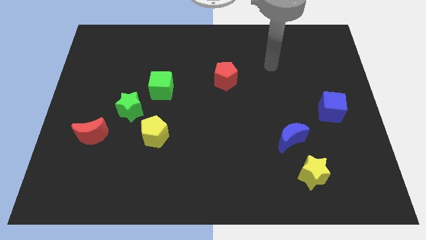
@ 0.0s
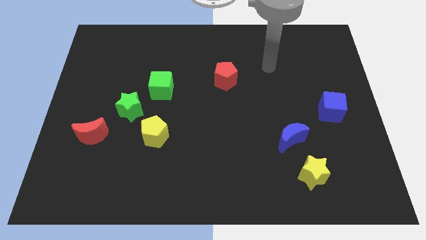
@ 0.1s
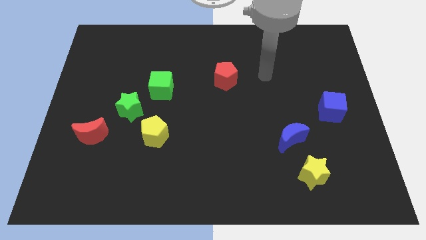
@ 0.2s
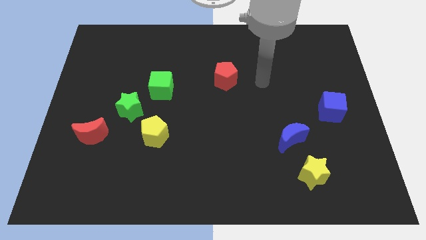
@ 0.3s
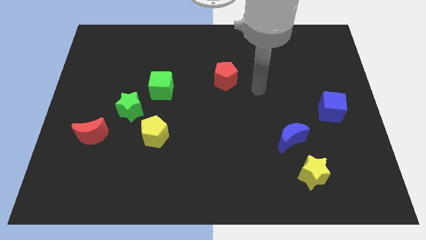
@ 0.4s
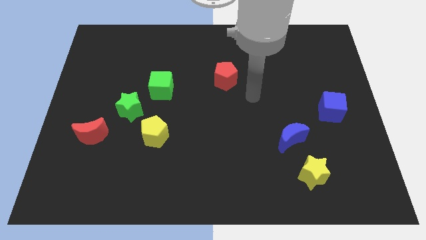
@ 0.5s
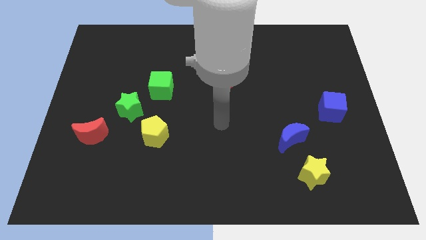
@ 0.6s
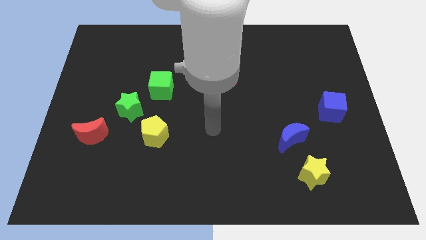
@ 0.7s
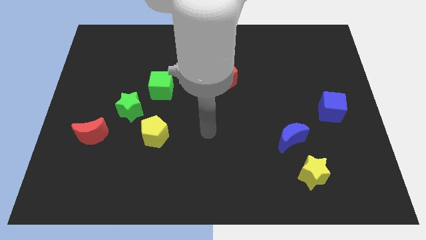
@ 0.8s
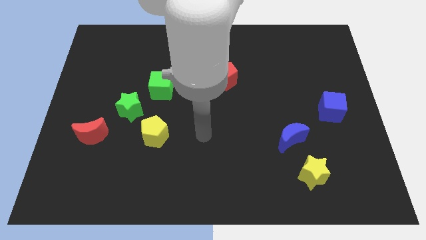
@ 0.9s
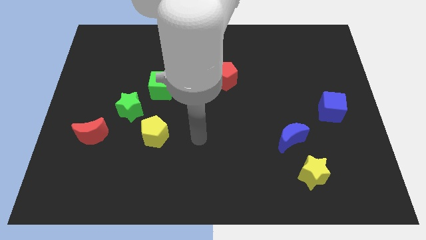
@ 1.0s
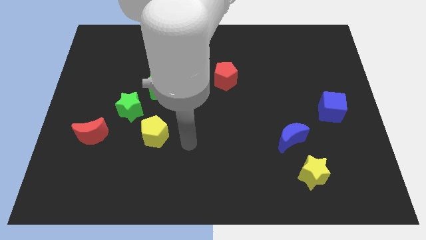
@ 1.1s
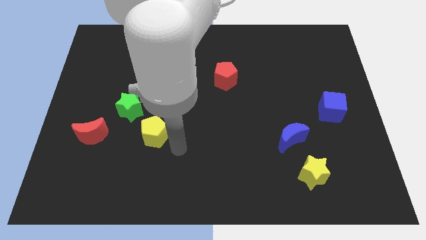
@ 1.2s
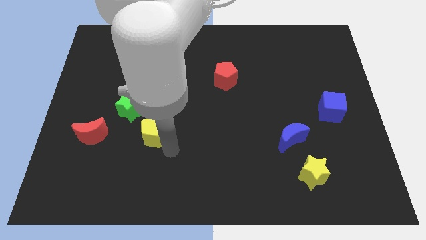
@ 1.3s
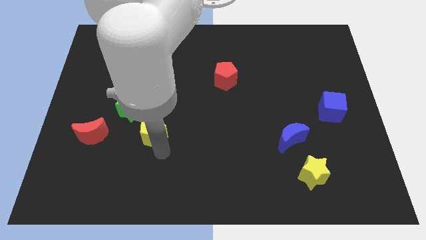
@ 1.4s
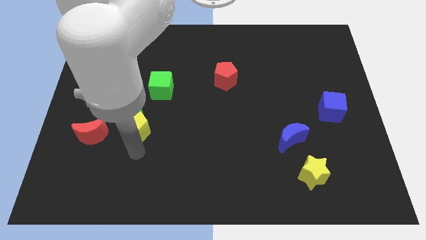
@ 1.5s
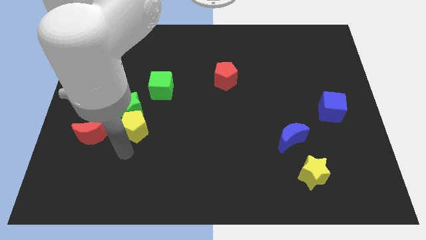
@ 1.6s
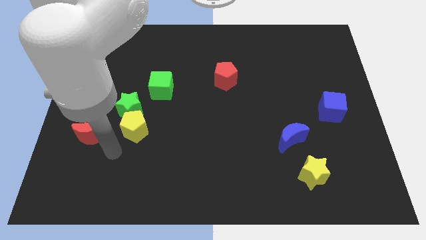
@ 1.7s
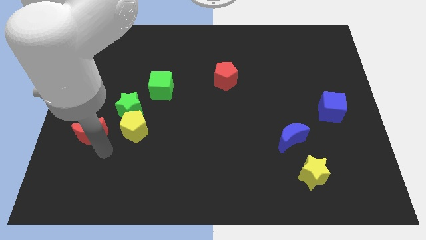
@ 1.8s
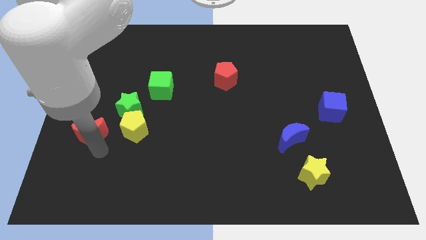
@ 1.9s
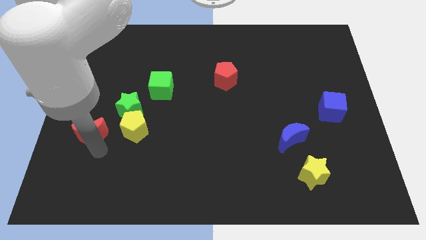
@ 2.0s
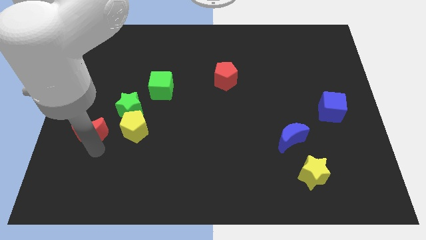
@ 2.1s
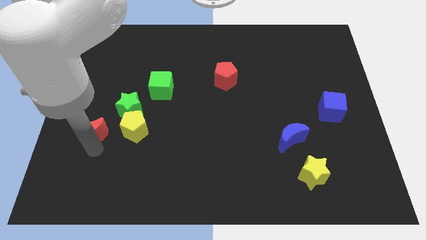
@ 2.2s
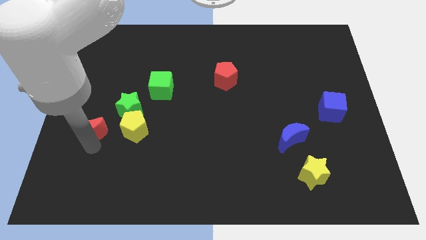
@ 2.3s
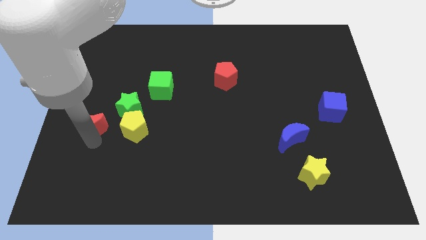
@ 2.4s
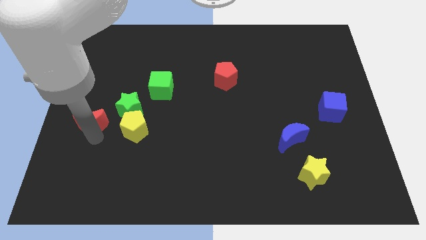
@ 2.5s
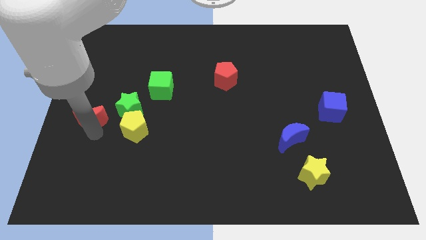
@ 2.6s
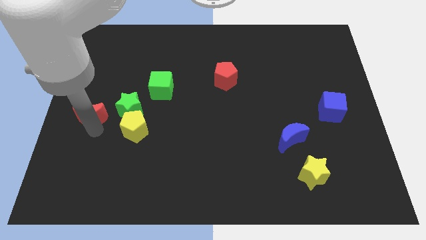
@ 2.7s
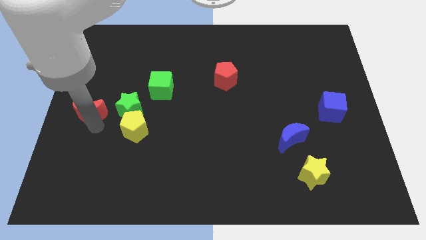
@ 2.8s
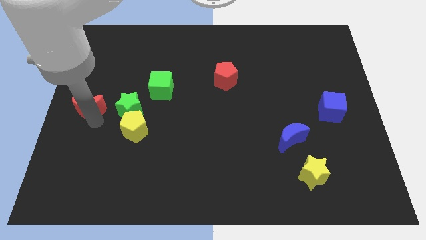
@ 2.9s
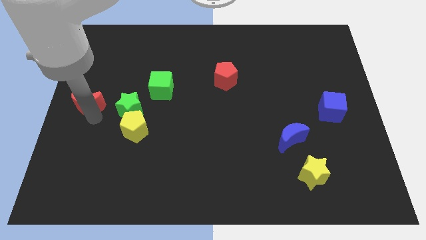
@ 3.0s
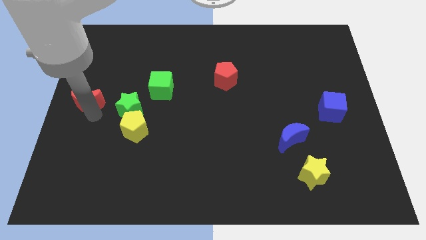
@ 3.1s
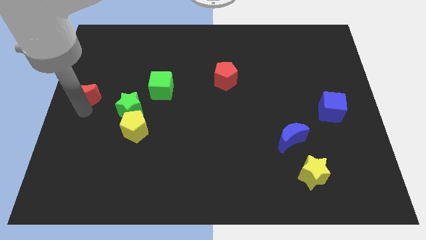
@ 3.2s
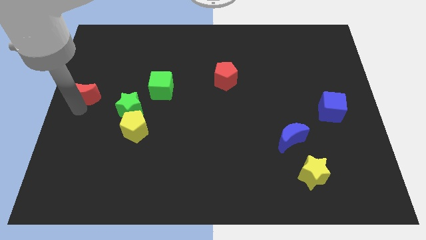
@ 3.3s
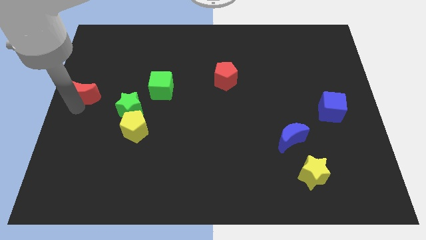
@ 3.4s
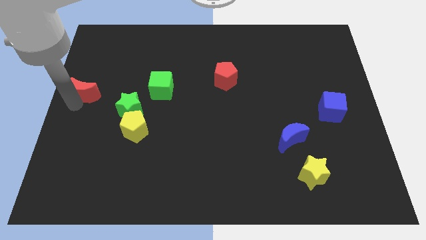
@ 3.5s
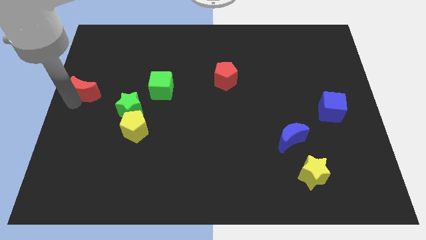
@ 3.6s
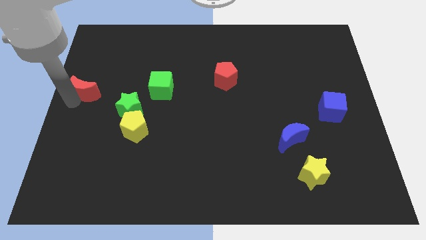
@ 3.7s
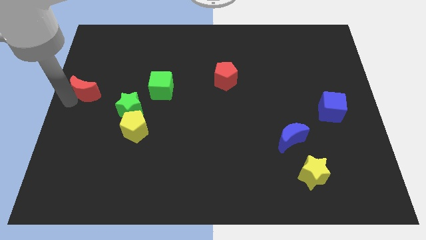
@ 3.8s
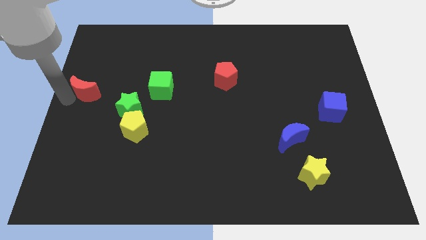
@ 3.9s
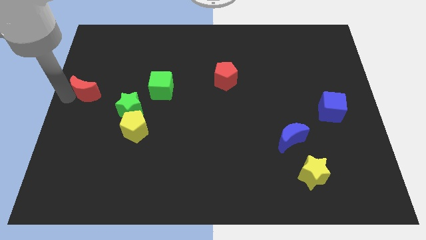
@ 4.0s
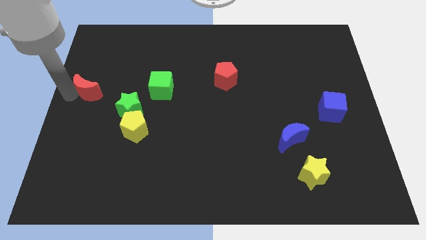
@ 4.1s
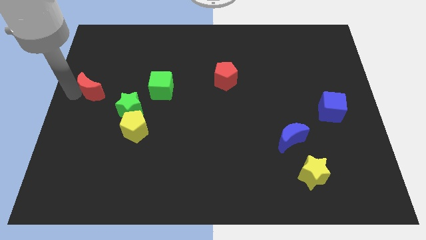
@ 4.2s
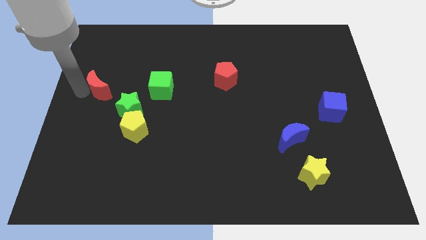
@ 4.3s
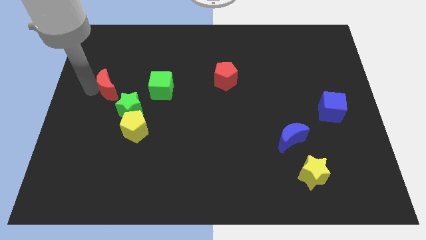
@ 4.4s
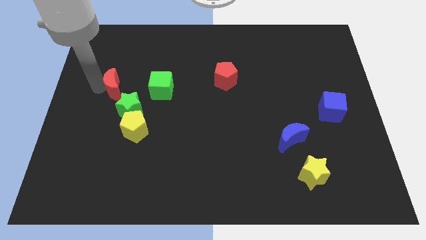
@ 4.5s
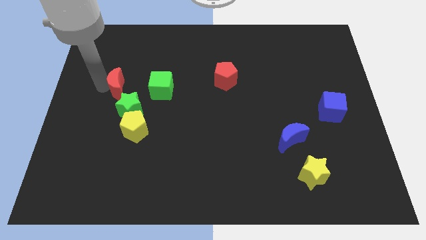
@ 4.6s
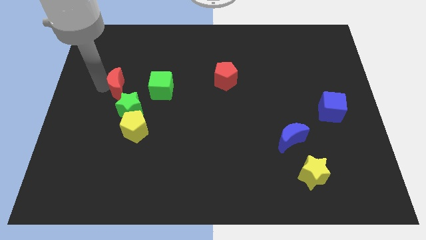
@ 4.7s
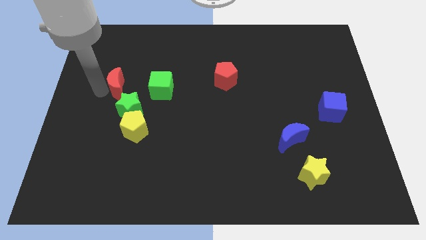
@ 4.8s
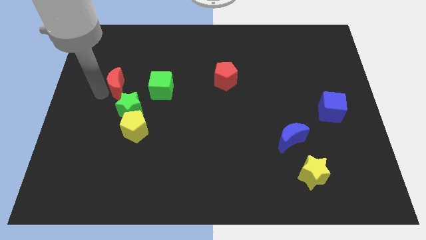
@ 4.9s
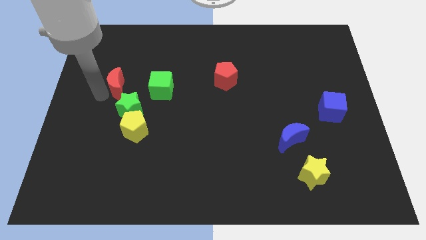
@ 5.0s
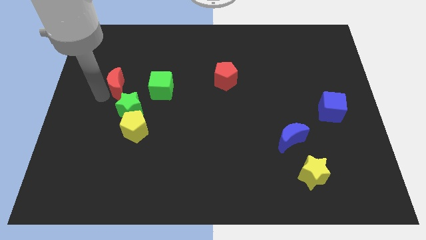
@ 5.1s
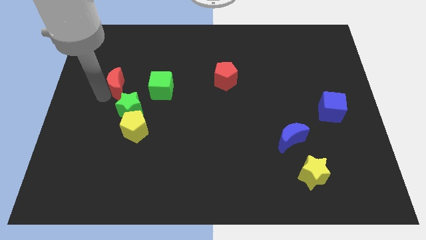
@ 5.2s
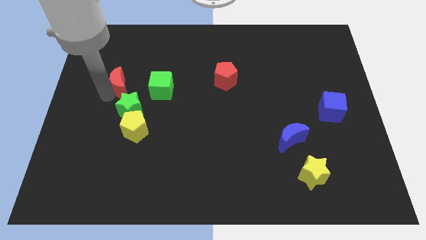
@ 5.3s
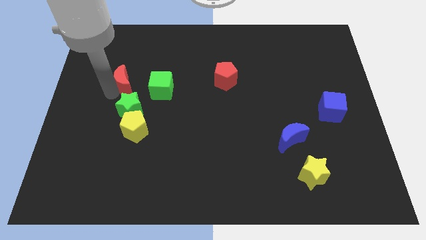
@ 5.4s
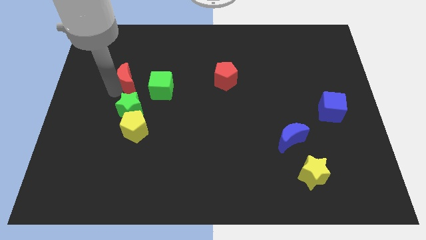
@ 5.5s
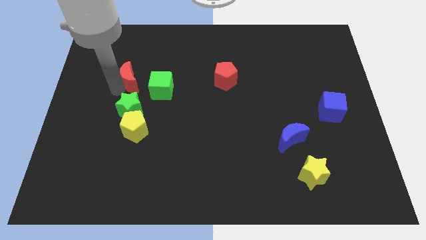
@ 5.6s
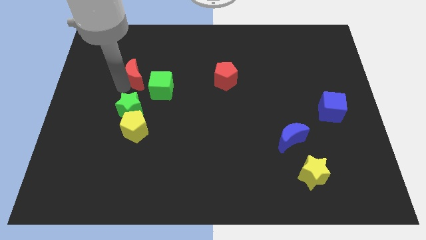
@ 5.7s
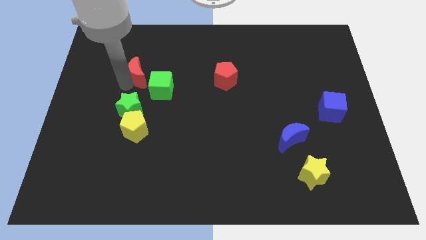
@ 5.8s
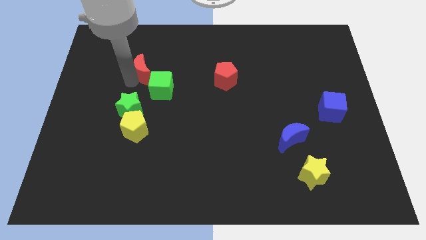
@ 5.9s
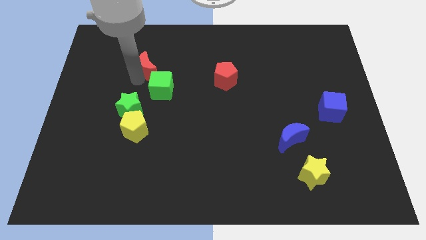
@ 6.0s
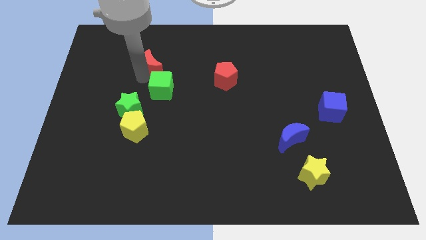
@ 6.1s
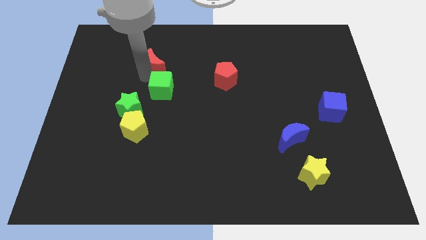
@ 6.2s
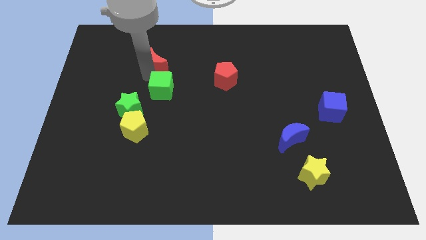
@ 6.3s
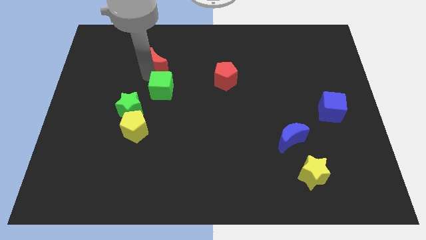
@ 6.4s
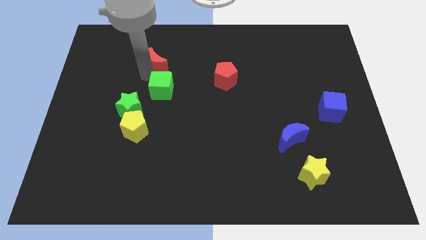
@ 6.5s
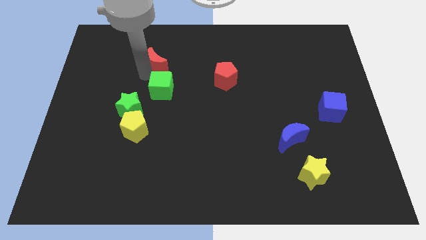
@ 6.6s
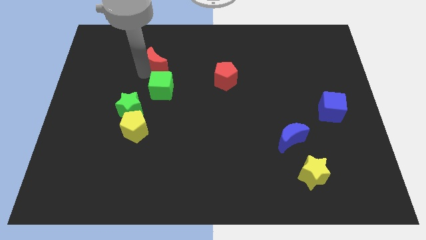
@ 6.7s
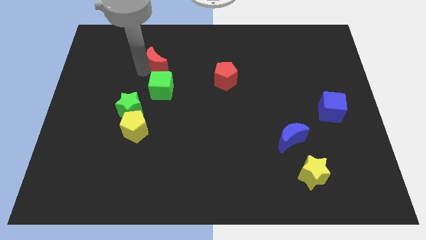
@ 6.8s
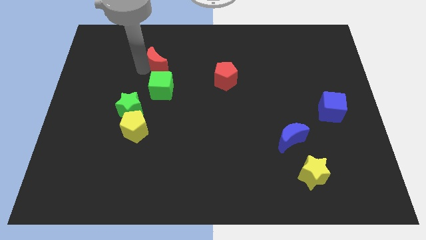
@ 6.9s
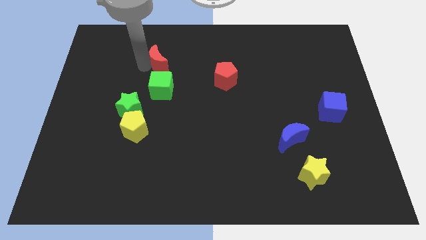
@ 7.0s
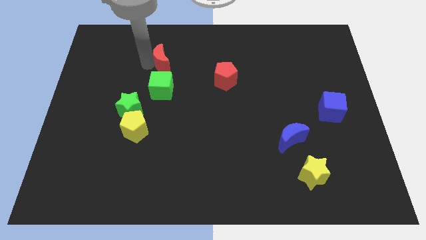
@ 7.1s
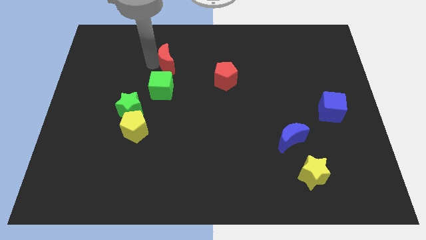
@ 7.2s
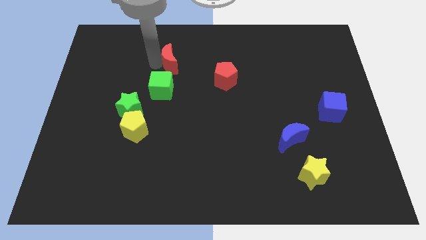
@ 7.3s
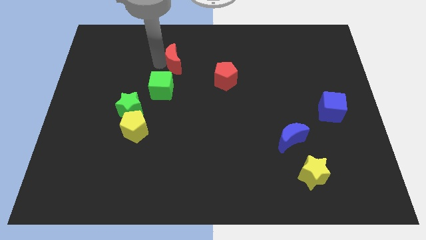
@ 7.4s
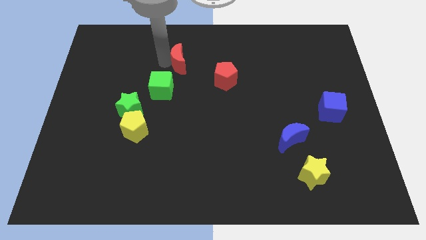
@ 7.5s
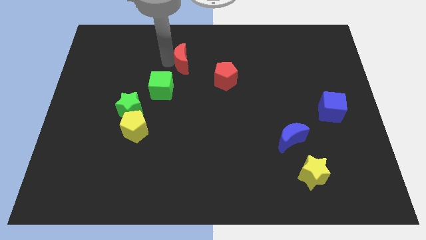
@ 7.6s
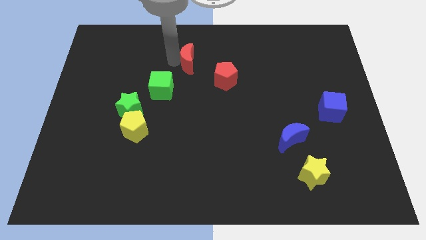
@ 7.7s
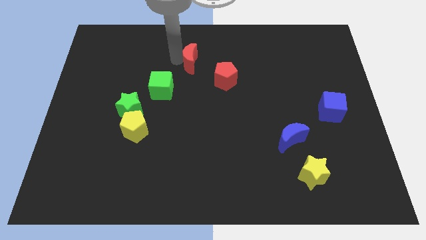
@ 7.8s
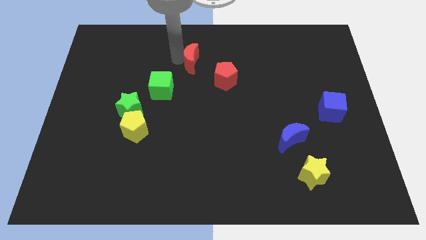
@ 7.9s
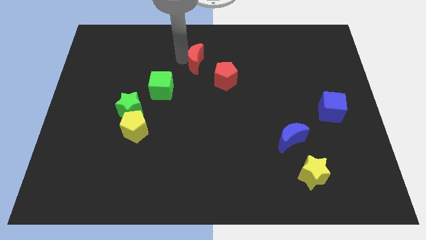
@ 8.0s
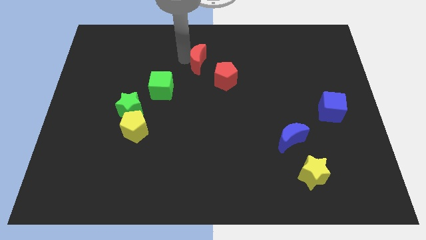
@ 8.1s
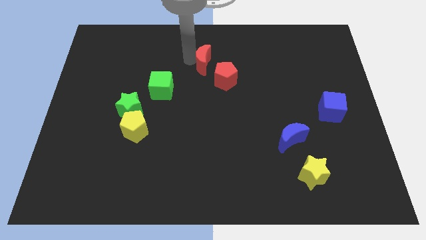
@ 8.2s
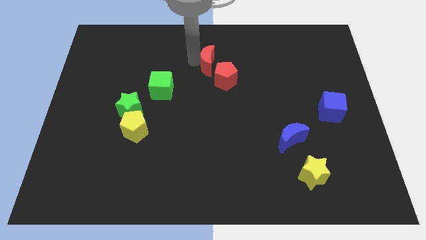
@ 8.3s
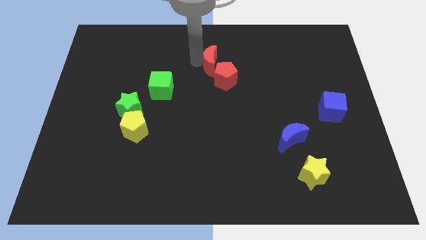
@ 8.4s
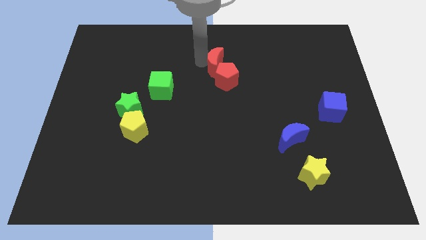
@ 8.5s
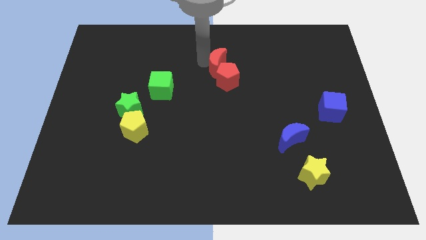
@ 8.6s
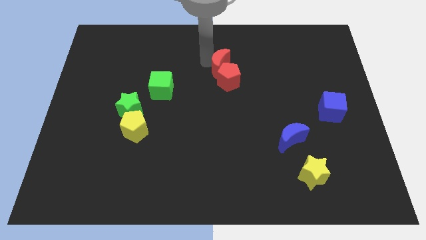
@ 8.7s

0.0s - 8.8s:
put the red moon close to the red pentagon
